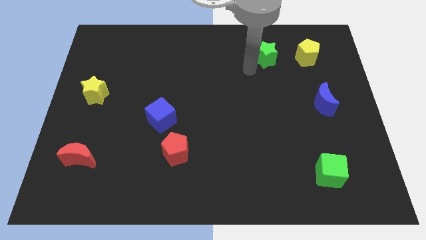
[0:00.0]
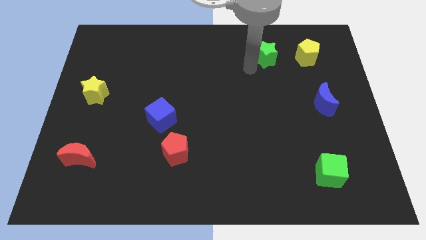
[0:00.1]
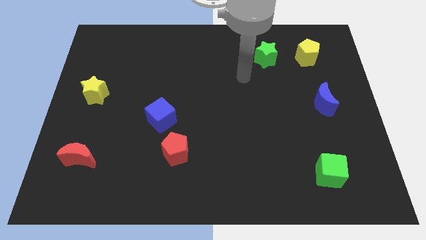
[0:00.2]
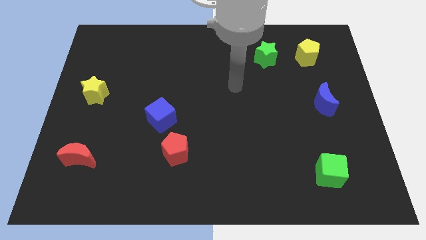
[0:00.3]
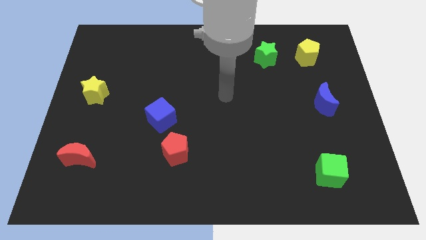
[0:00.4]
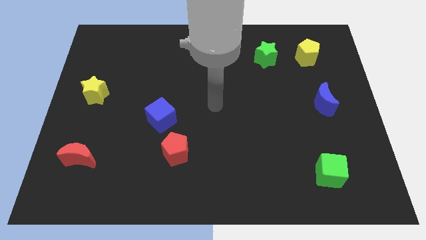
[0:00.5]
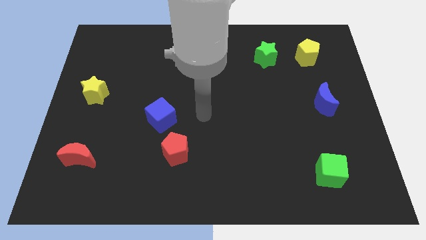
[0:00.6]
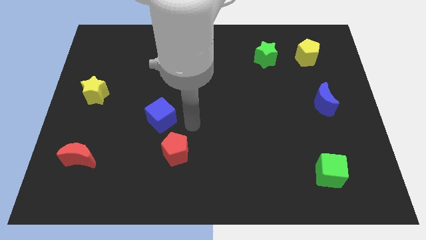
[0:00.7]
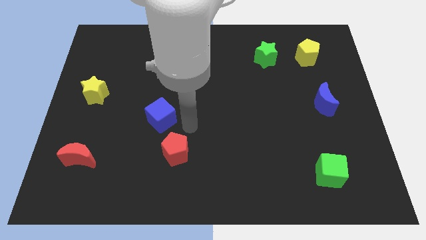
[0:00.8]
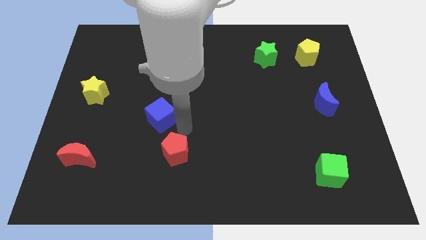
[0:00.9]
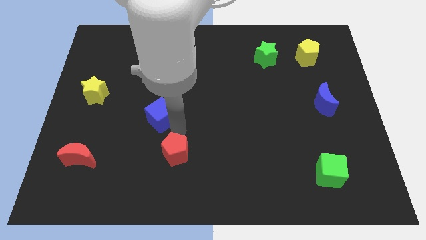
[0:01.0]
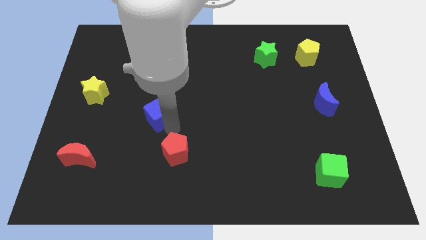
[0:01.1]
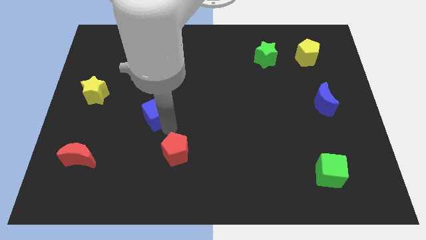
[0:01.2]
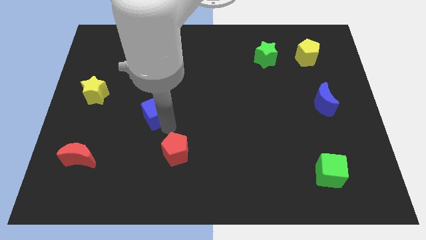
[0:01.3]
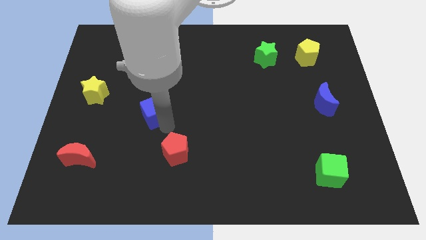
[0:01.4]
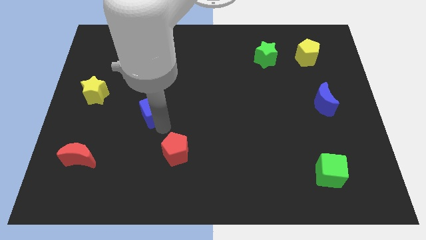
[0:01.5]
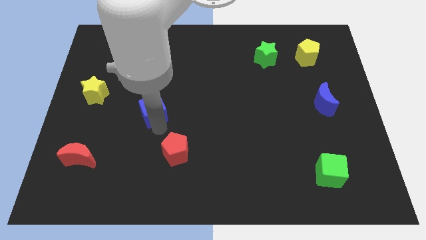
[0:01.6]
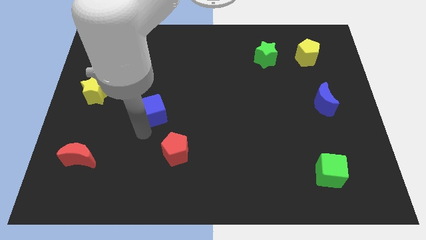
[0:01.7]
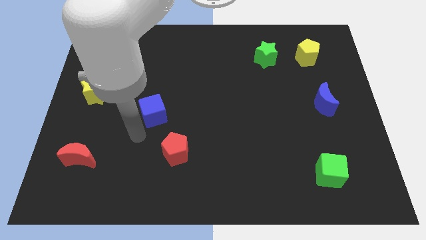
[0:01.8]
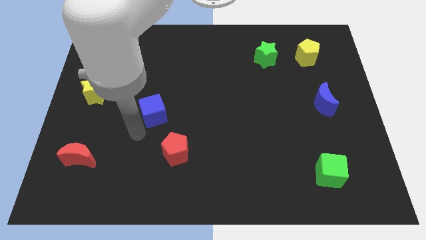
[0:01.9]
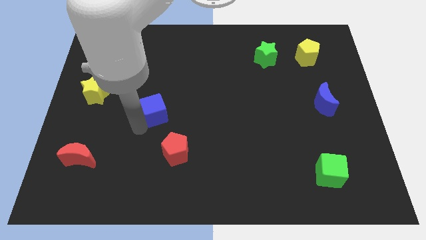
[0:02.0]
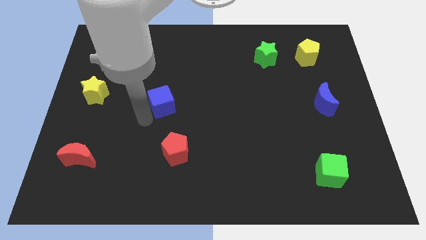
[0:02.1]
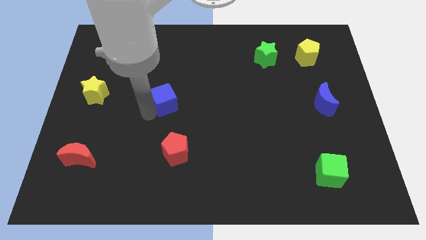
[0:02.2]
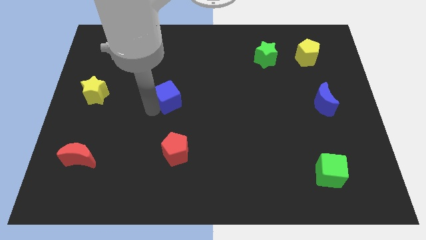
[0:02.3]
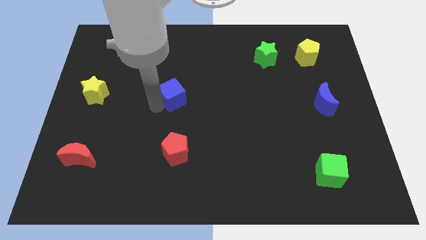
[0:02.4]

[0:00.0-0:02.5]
move the blue cube to the right of the yellow star

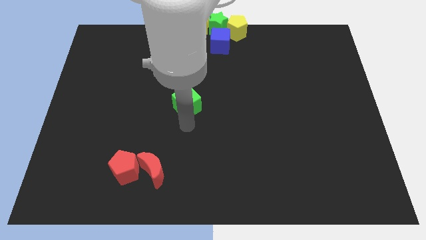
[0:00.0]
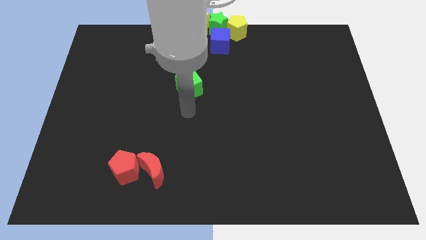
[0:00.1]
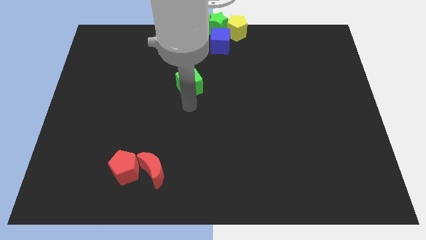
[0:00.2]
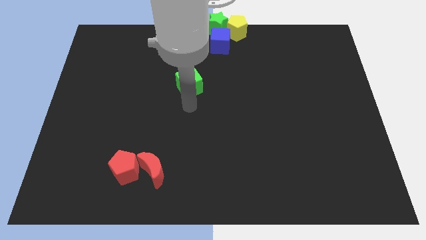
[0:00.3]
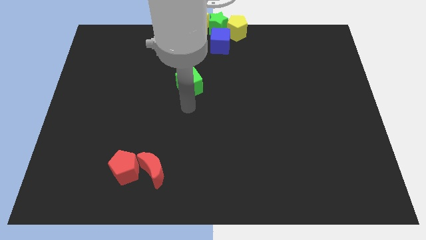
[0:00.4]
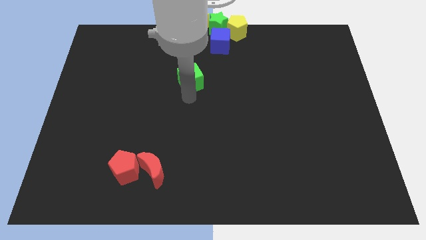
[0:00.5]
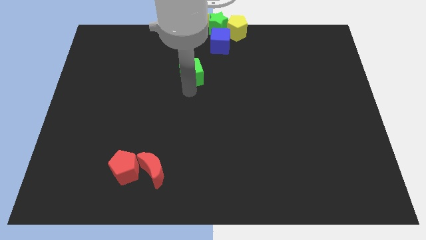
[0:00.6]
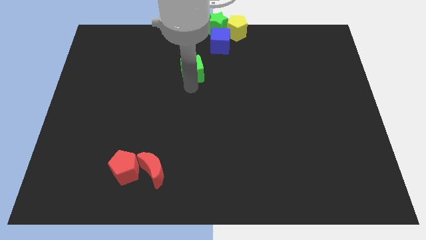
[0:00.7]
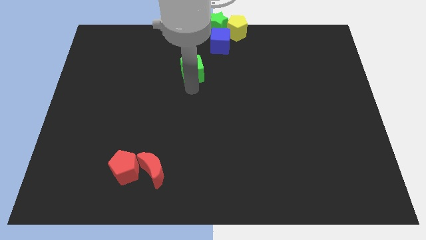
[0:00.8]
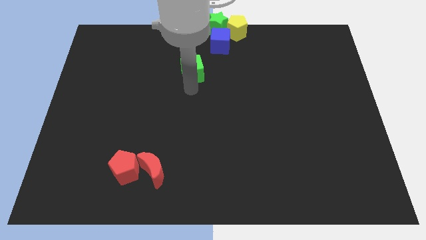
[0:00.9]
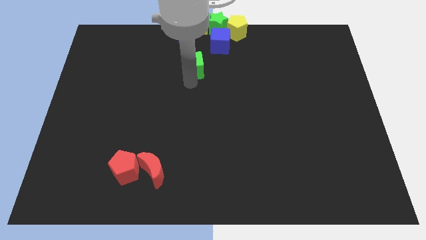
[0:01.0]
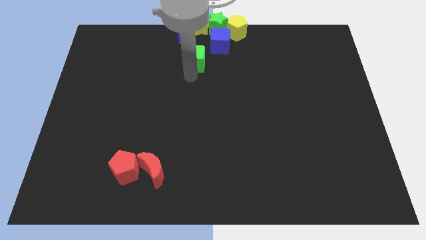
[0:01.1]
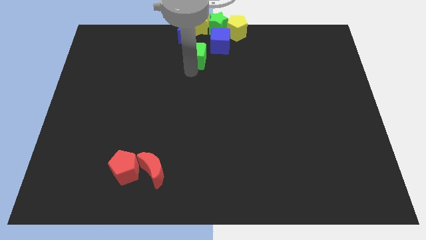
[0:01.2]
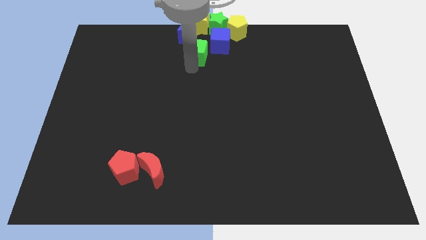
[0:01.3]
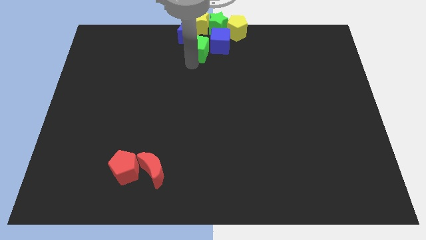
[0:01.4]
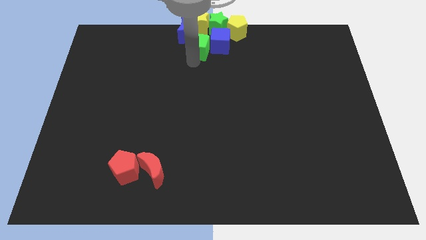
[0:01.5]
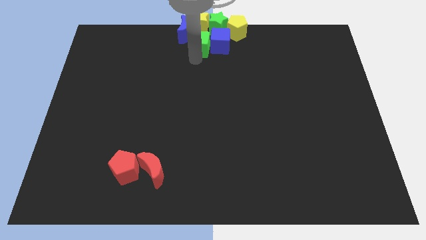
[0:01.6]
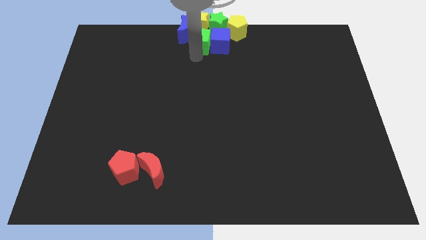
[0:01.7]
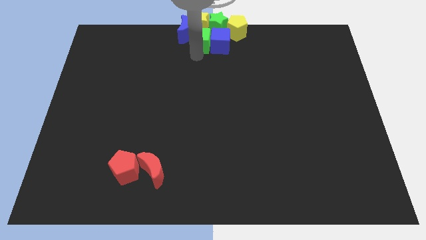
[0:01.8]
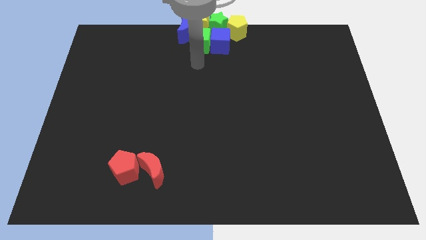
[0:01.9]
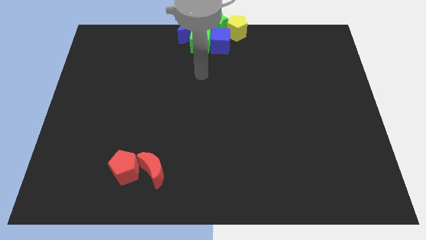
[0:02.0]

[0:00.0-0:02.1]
place the green cube below the yellow star

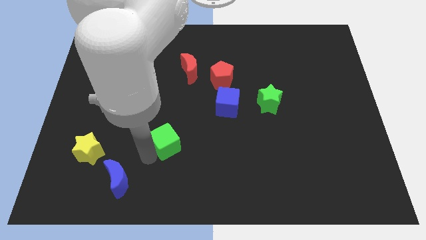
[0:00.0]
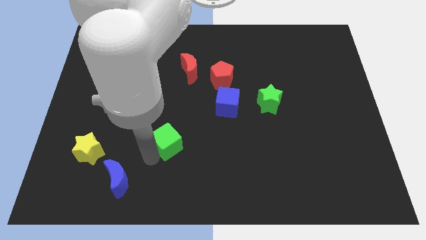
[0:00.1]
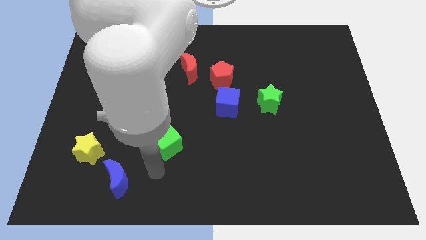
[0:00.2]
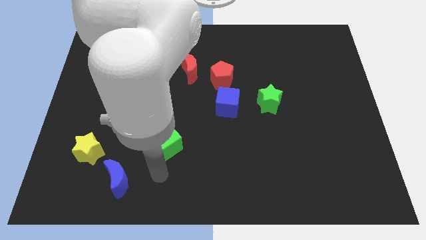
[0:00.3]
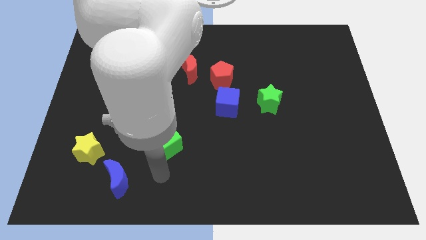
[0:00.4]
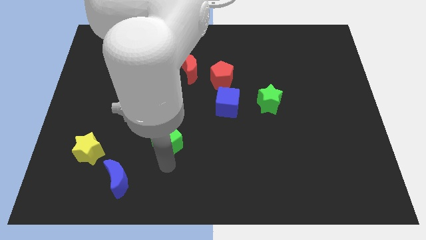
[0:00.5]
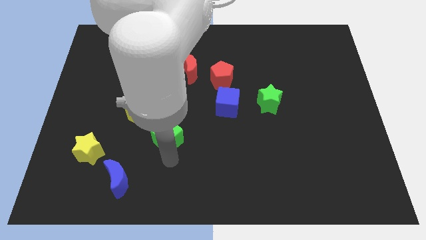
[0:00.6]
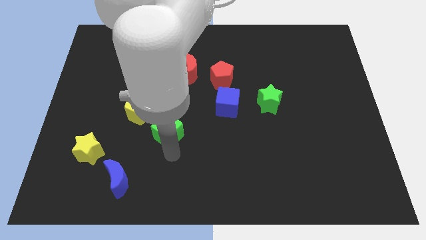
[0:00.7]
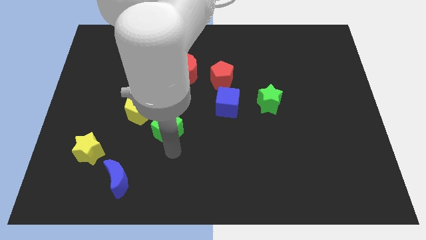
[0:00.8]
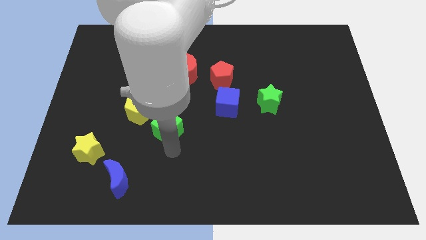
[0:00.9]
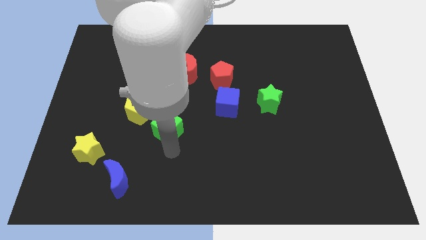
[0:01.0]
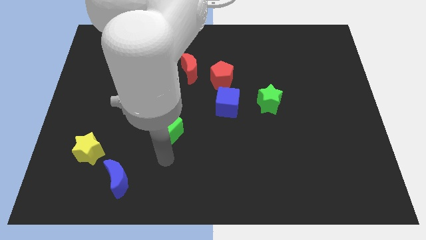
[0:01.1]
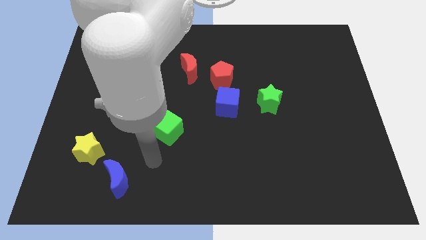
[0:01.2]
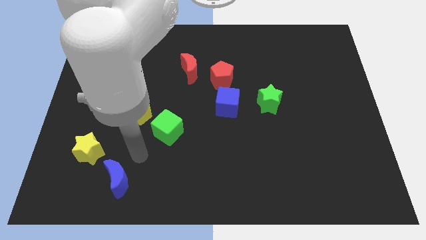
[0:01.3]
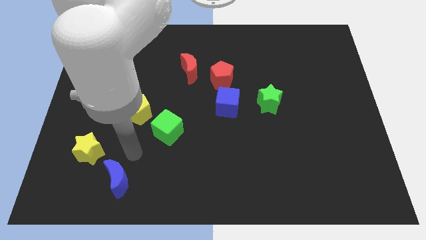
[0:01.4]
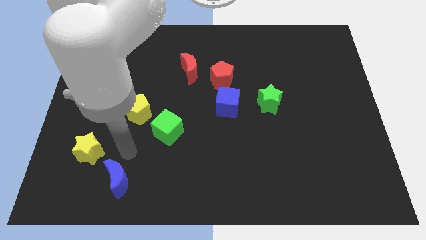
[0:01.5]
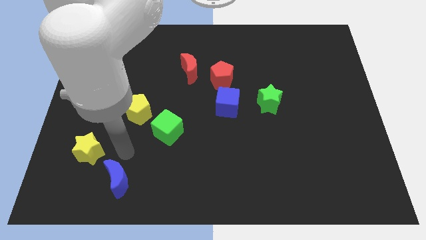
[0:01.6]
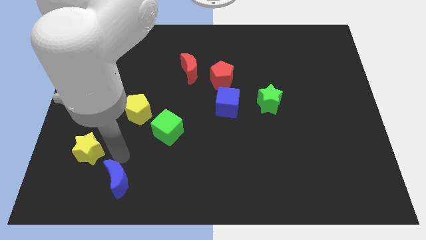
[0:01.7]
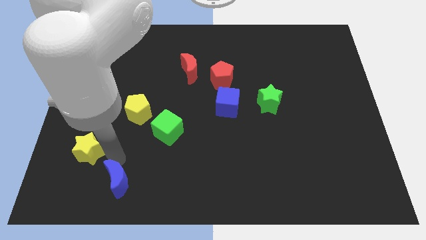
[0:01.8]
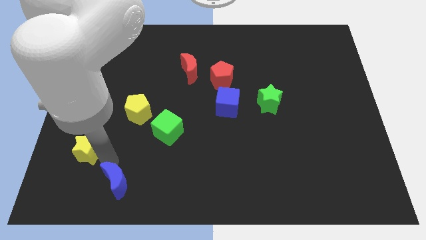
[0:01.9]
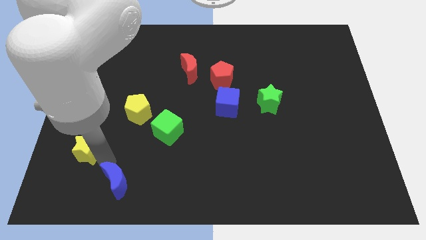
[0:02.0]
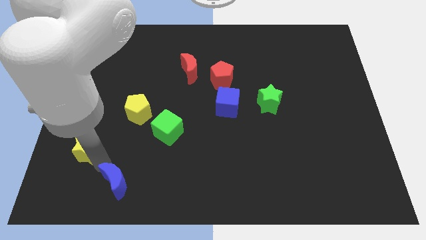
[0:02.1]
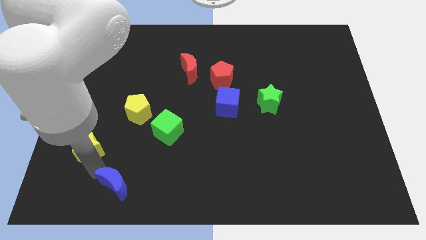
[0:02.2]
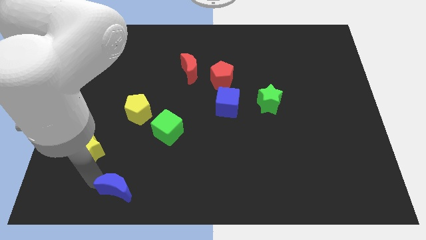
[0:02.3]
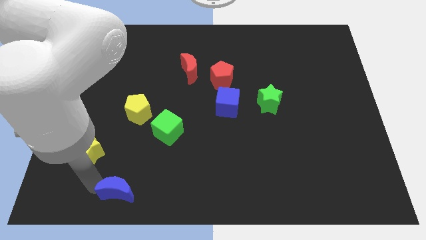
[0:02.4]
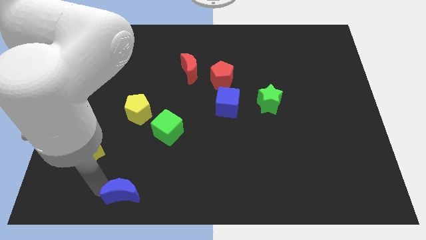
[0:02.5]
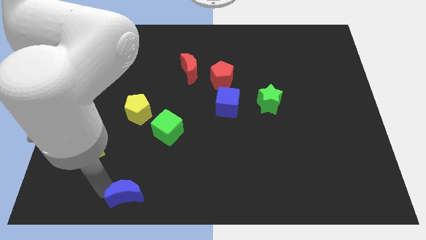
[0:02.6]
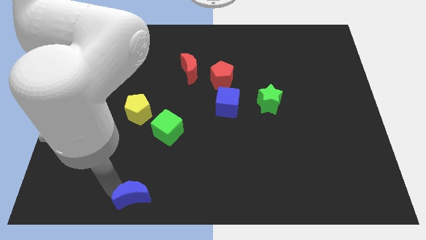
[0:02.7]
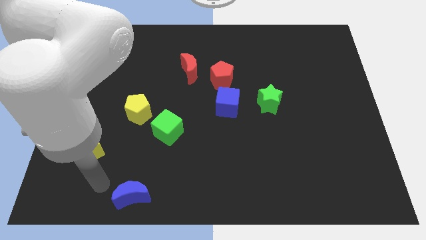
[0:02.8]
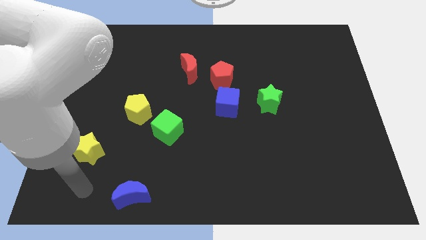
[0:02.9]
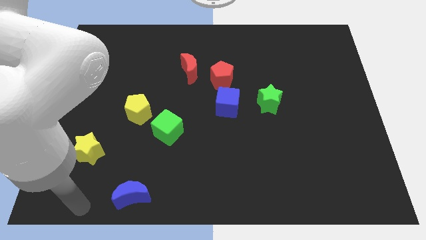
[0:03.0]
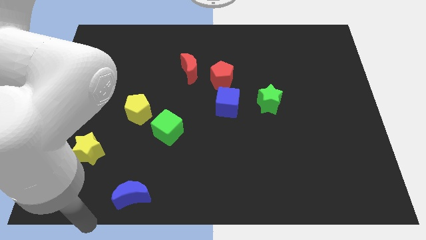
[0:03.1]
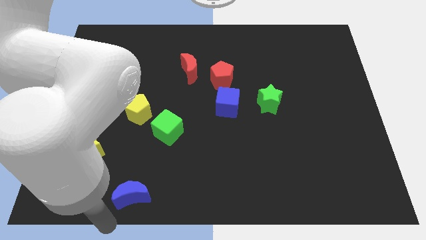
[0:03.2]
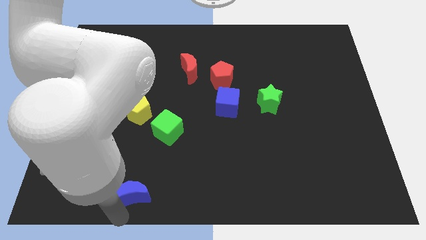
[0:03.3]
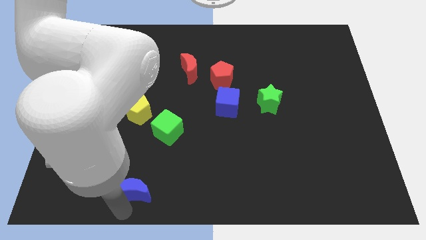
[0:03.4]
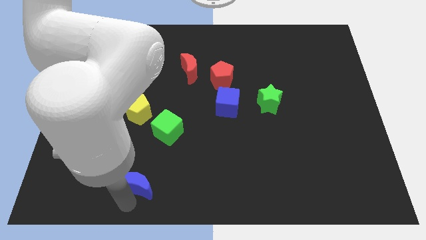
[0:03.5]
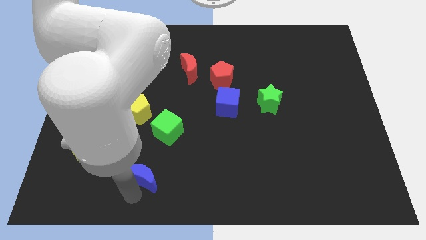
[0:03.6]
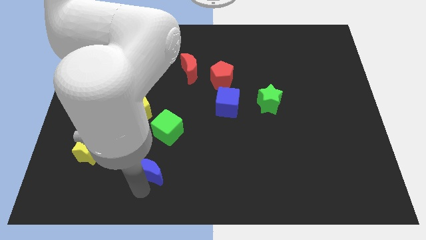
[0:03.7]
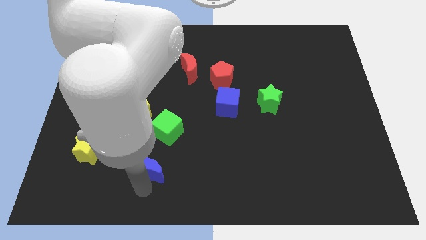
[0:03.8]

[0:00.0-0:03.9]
move blue moon upwards

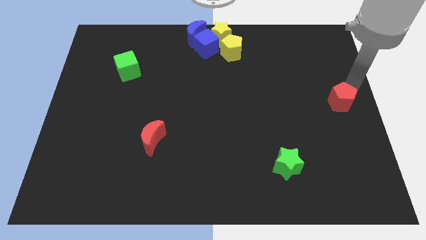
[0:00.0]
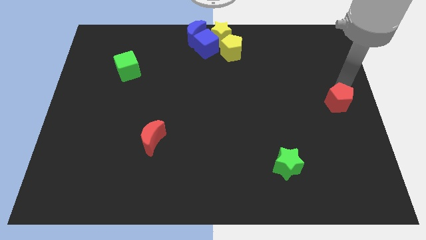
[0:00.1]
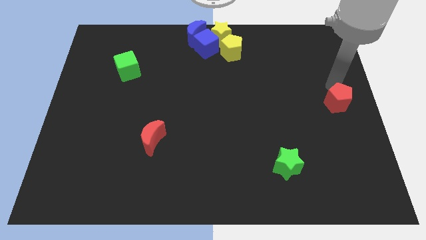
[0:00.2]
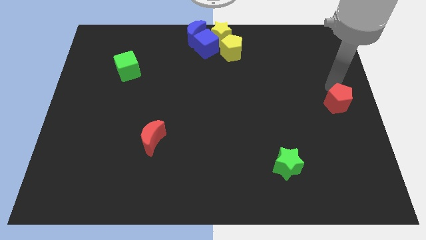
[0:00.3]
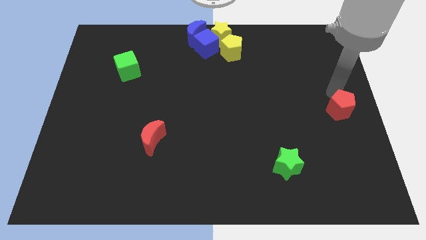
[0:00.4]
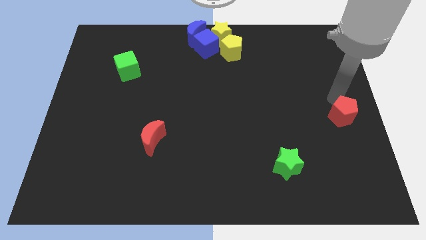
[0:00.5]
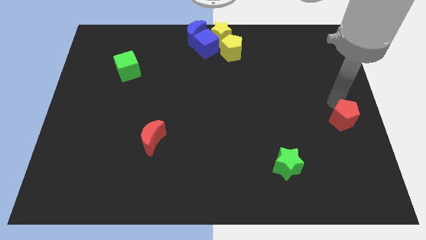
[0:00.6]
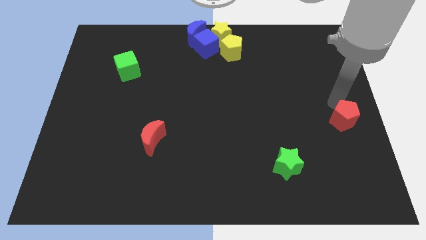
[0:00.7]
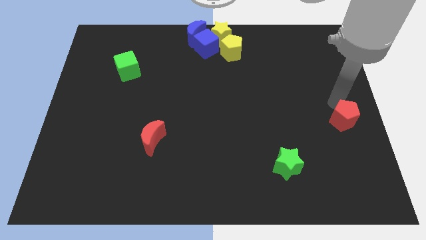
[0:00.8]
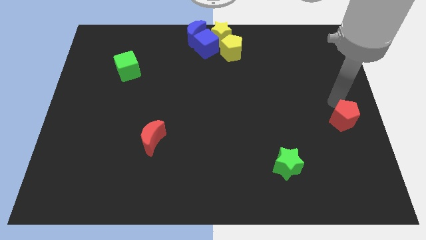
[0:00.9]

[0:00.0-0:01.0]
push the red pentagon slightly below
